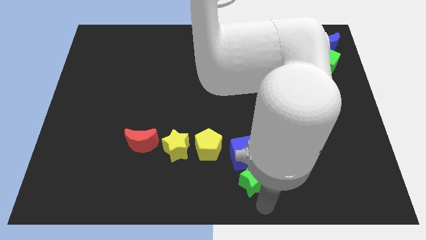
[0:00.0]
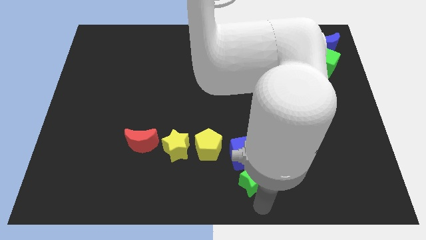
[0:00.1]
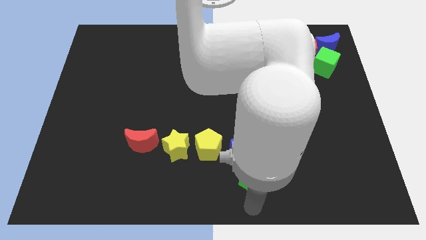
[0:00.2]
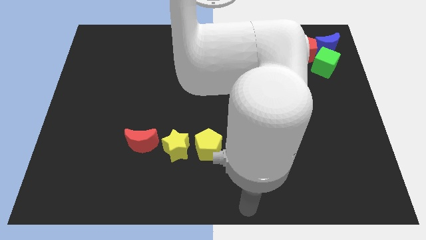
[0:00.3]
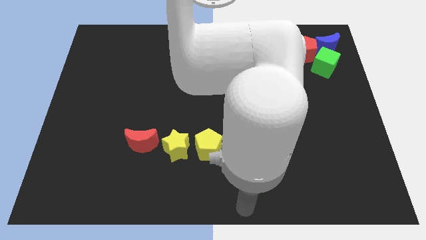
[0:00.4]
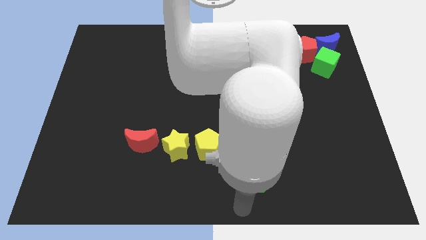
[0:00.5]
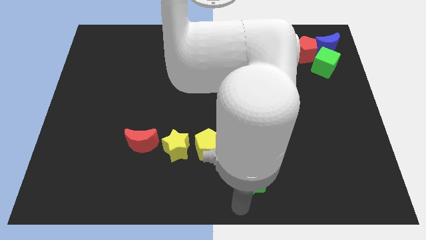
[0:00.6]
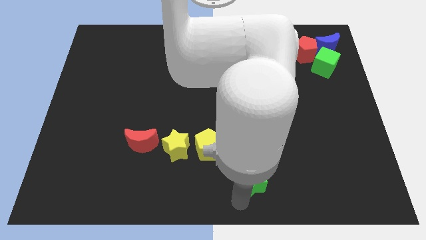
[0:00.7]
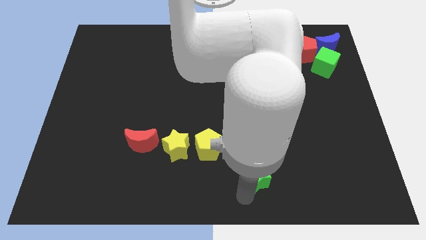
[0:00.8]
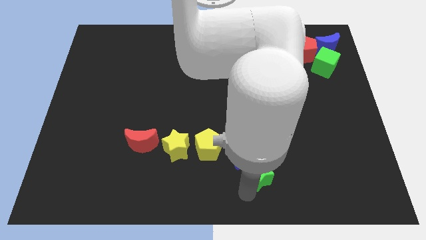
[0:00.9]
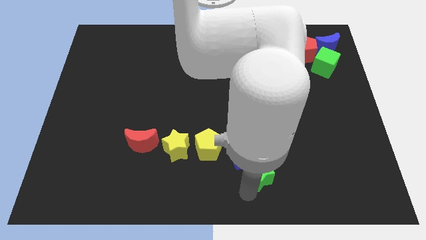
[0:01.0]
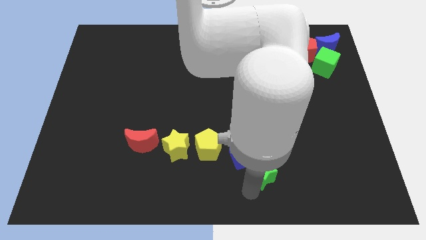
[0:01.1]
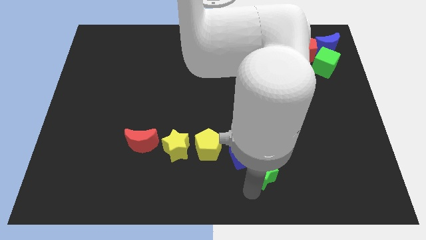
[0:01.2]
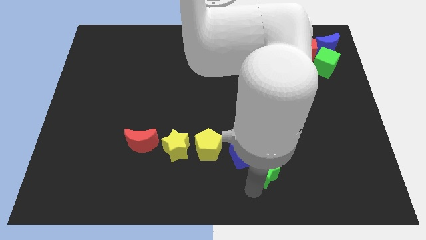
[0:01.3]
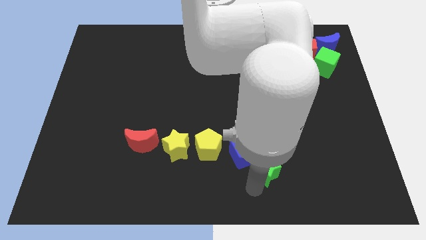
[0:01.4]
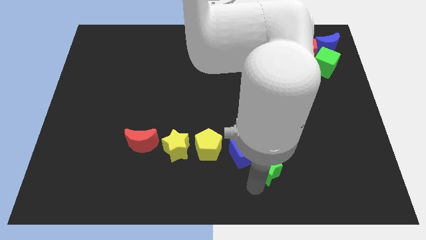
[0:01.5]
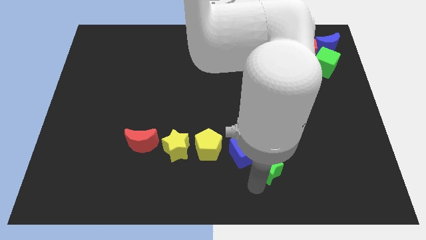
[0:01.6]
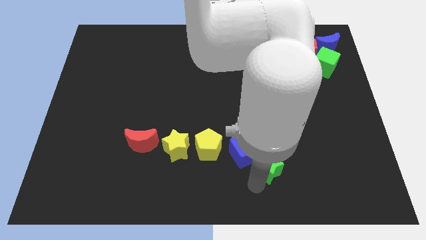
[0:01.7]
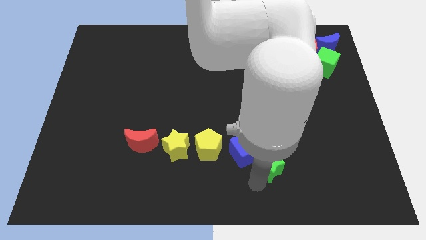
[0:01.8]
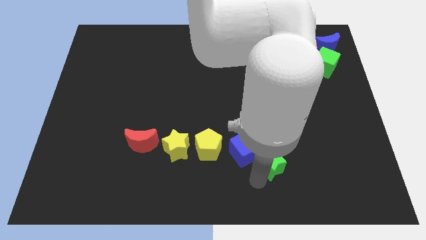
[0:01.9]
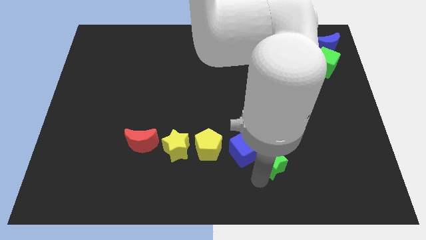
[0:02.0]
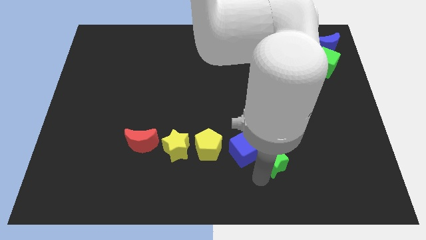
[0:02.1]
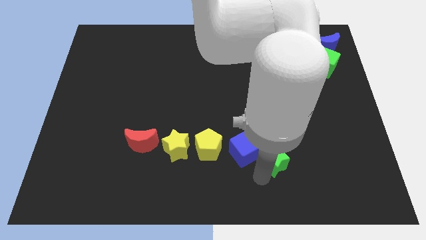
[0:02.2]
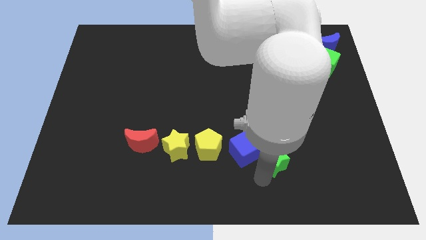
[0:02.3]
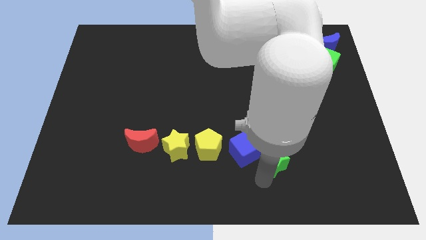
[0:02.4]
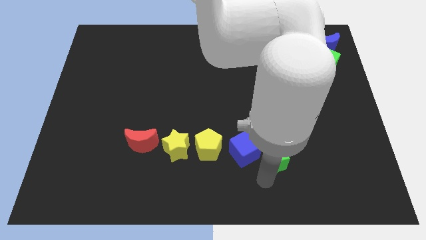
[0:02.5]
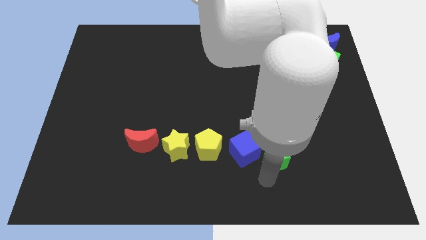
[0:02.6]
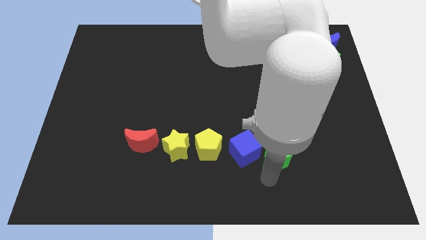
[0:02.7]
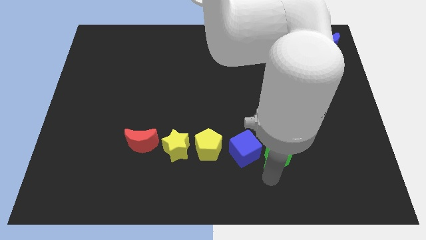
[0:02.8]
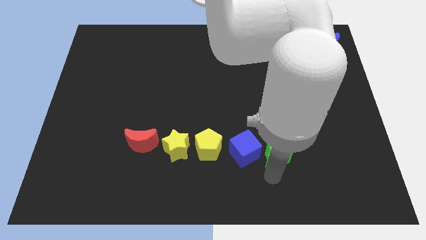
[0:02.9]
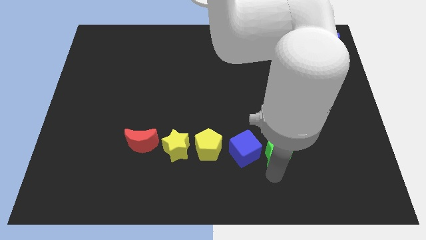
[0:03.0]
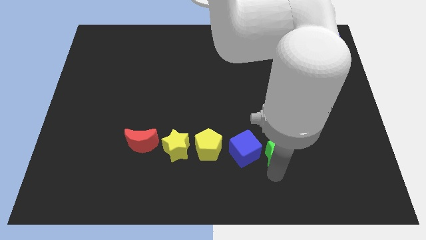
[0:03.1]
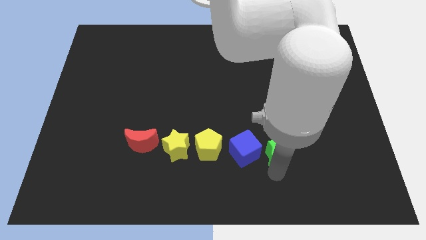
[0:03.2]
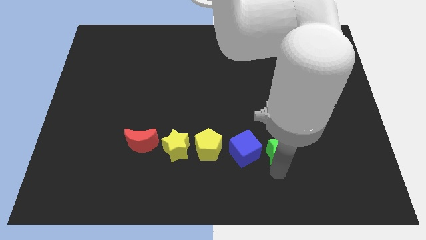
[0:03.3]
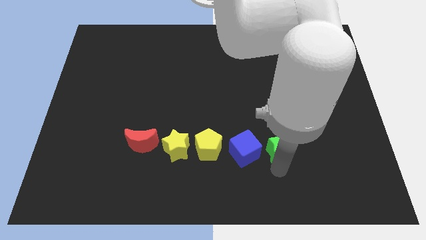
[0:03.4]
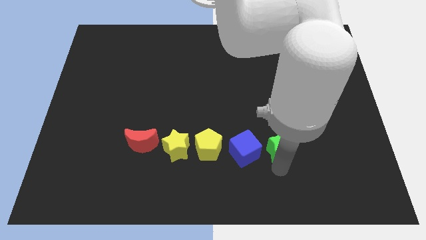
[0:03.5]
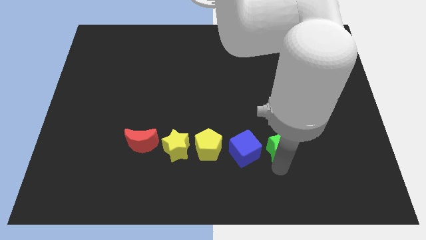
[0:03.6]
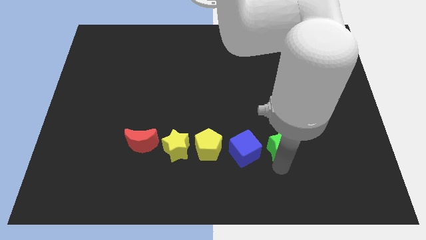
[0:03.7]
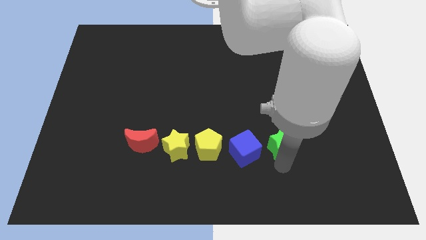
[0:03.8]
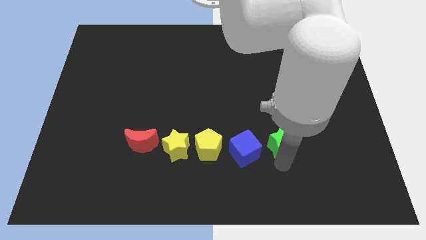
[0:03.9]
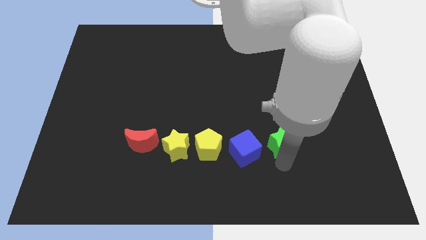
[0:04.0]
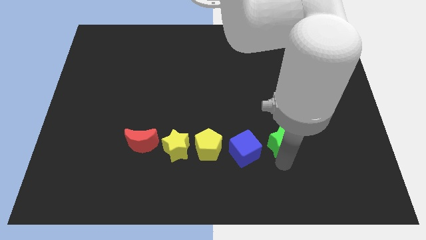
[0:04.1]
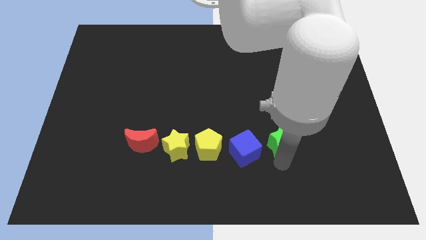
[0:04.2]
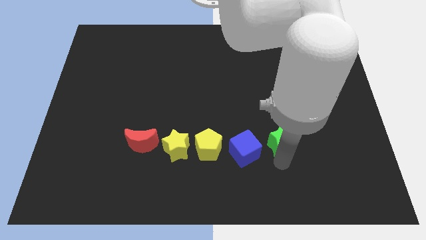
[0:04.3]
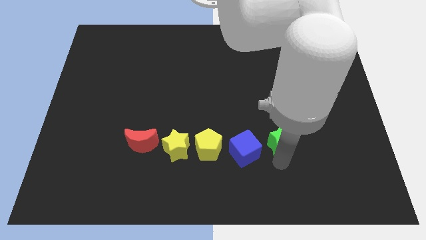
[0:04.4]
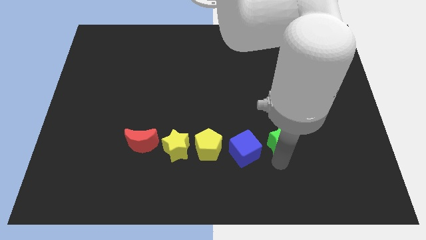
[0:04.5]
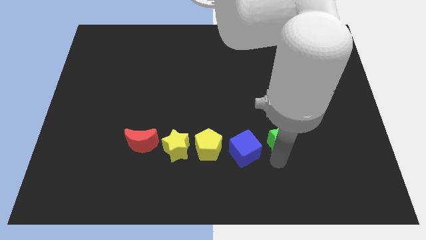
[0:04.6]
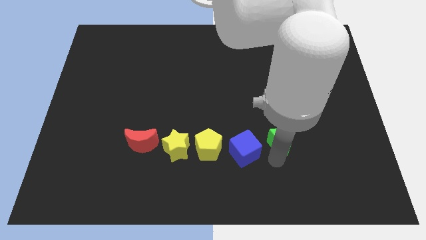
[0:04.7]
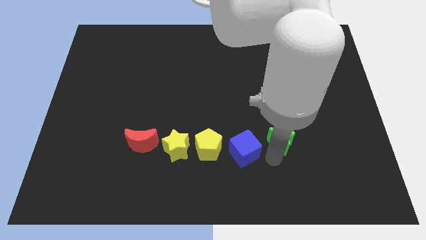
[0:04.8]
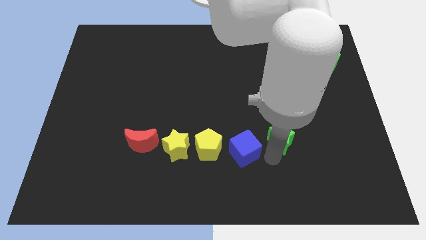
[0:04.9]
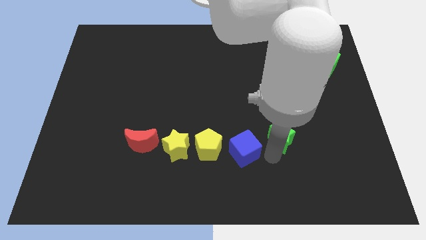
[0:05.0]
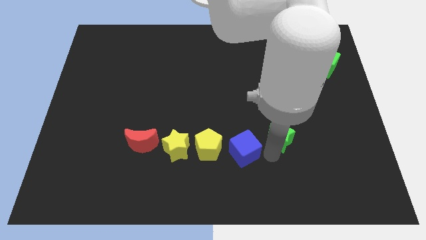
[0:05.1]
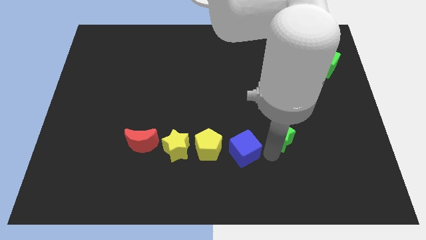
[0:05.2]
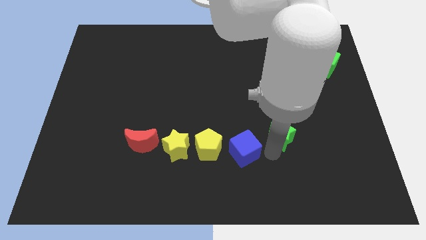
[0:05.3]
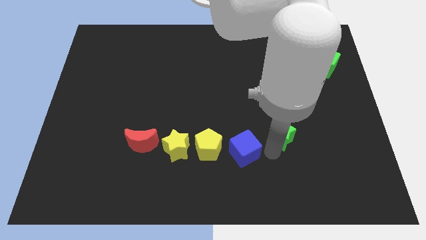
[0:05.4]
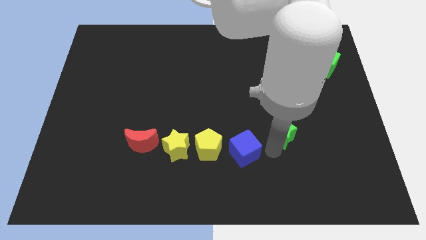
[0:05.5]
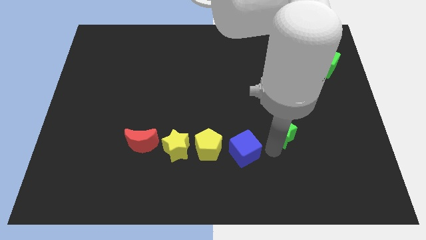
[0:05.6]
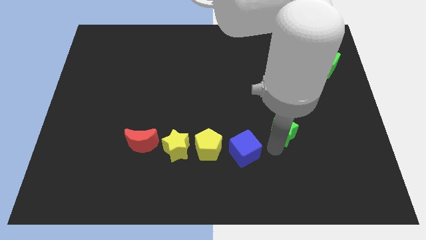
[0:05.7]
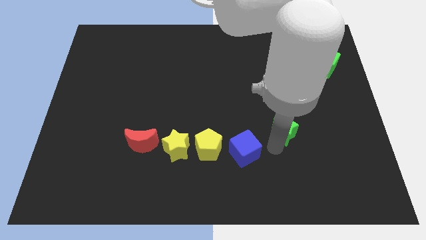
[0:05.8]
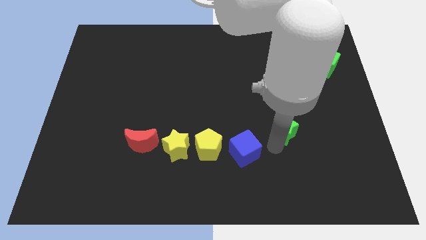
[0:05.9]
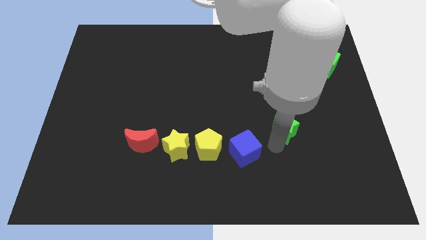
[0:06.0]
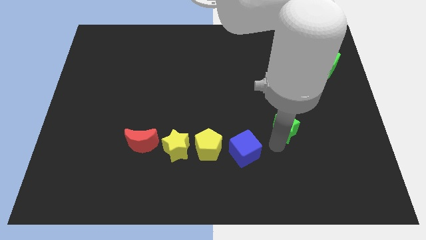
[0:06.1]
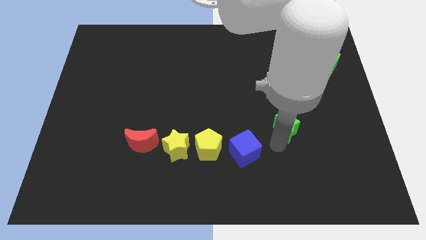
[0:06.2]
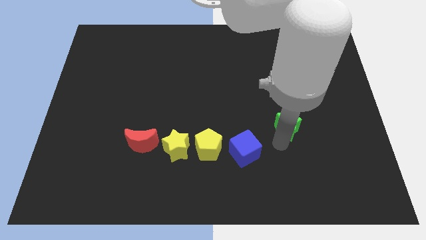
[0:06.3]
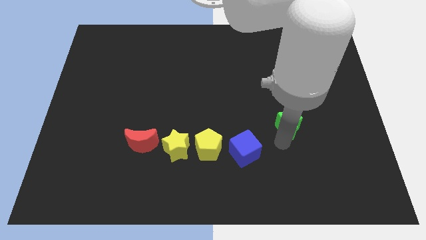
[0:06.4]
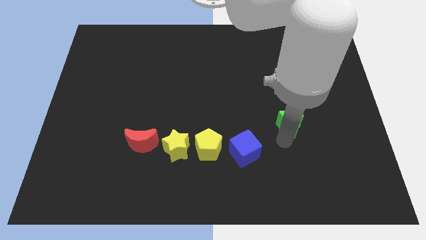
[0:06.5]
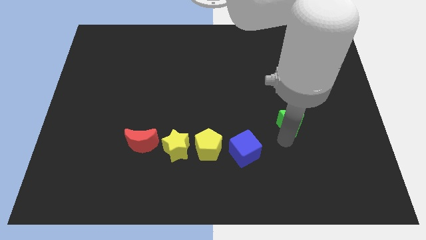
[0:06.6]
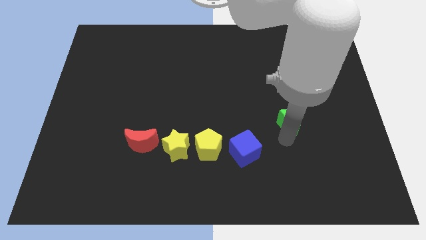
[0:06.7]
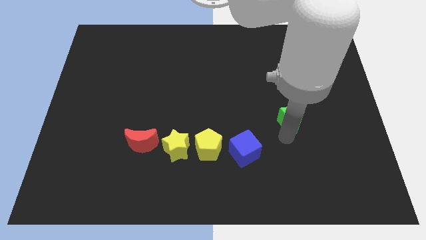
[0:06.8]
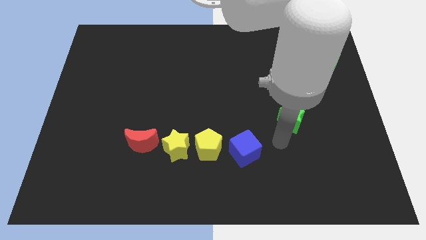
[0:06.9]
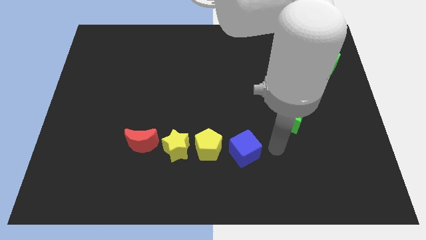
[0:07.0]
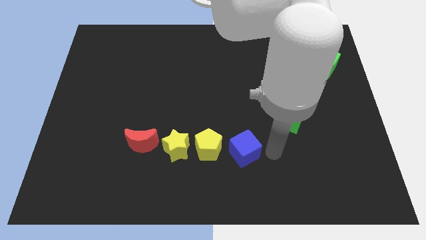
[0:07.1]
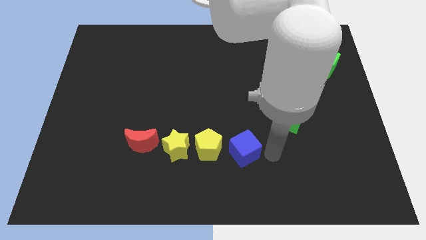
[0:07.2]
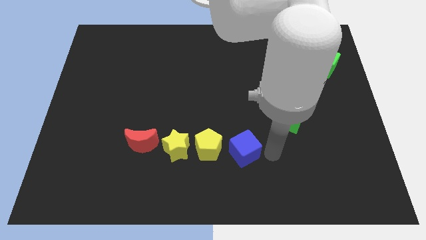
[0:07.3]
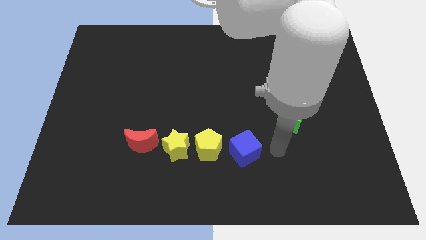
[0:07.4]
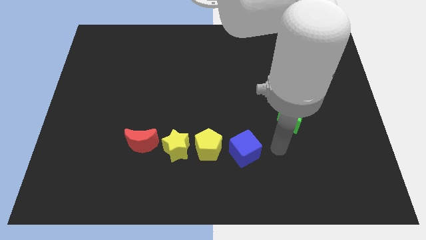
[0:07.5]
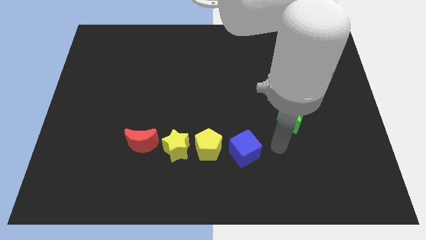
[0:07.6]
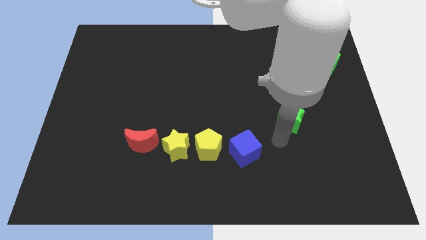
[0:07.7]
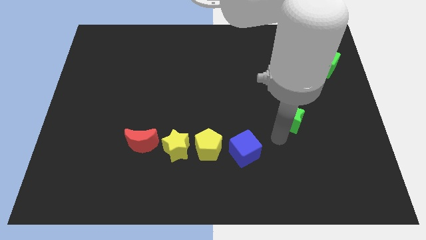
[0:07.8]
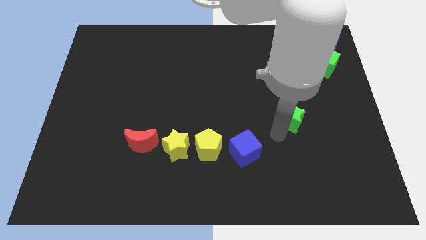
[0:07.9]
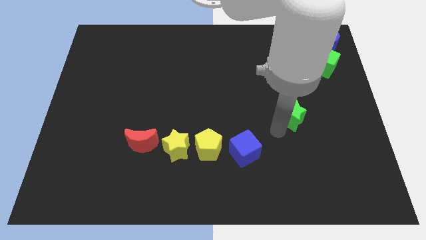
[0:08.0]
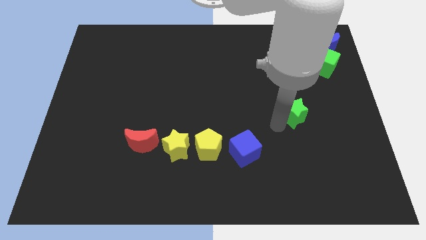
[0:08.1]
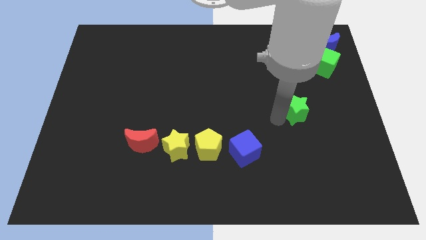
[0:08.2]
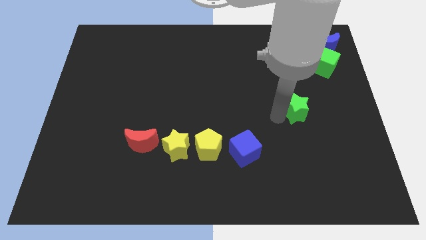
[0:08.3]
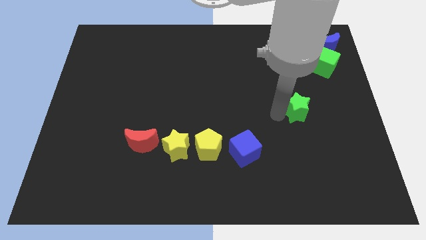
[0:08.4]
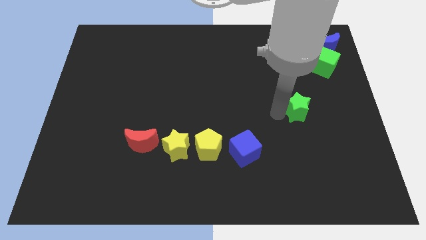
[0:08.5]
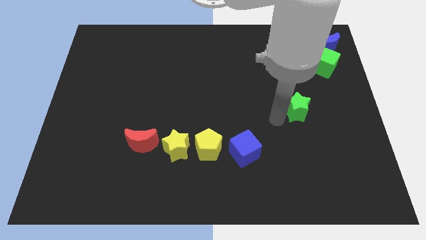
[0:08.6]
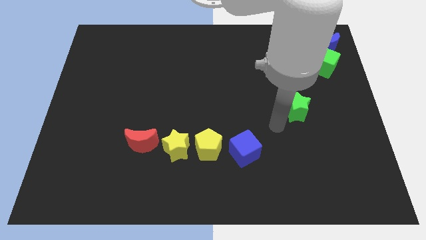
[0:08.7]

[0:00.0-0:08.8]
push the green star upwards

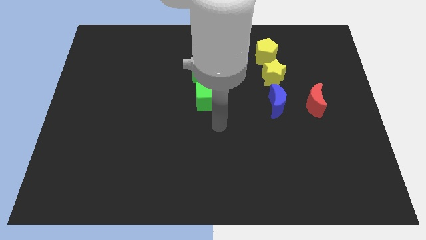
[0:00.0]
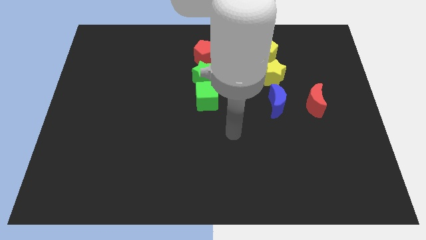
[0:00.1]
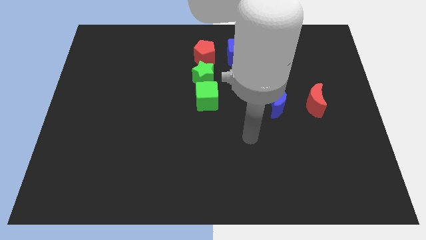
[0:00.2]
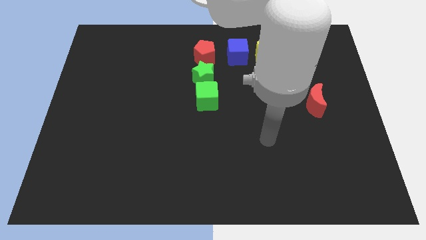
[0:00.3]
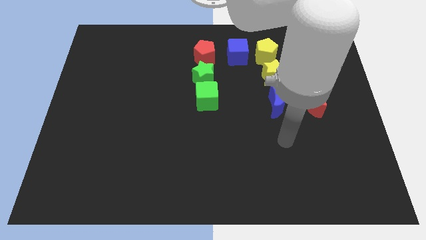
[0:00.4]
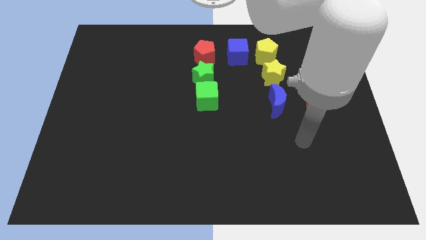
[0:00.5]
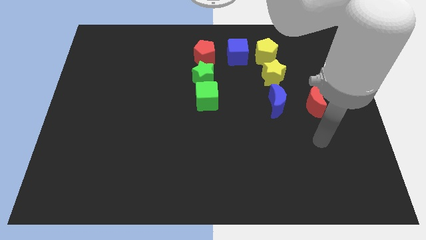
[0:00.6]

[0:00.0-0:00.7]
move your arm towards the bottom of the red crescent
